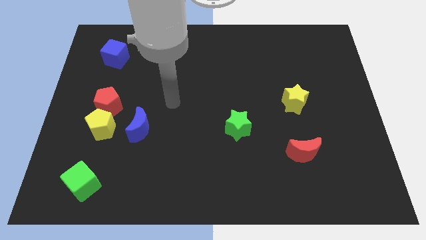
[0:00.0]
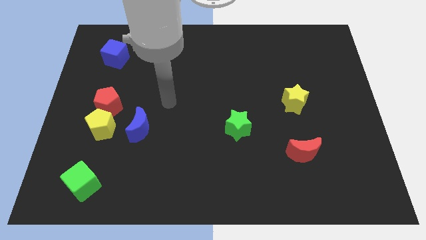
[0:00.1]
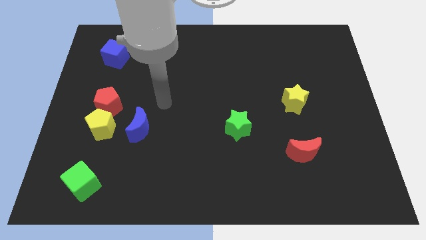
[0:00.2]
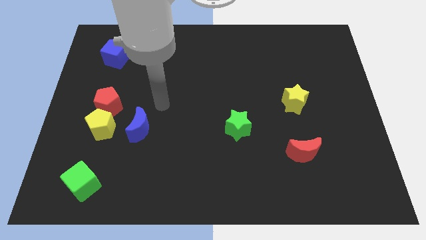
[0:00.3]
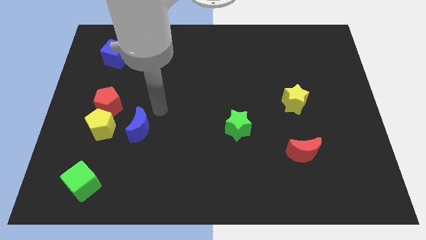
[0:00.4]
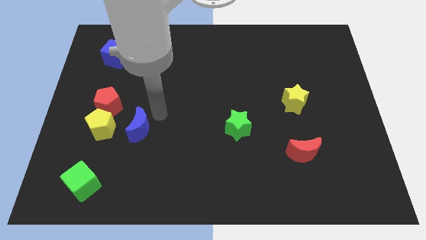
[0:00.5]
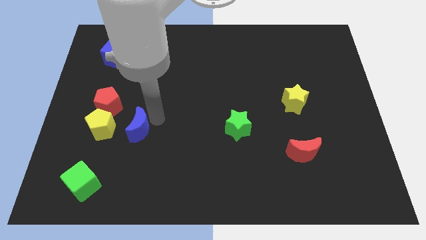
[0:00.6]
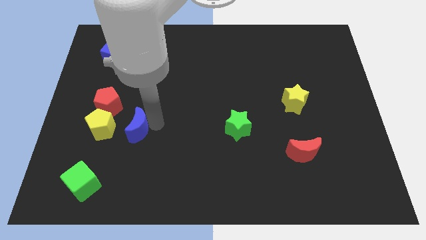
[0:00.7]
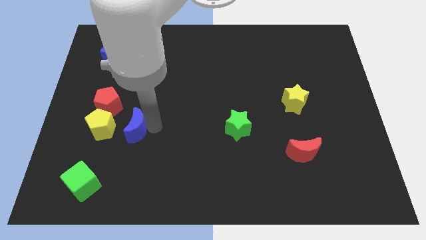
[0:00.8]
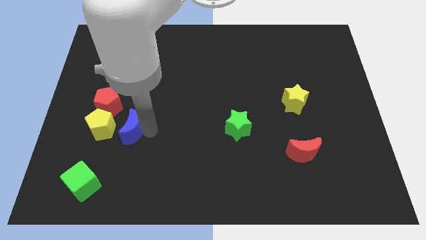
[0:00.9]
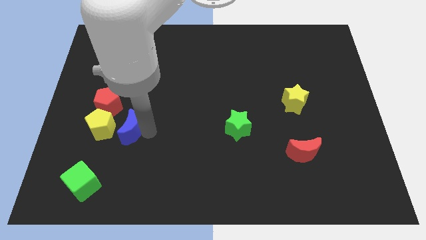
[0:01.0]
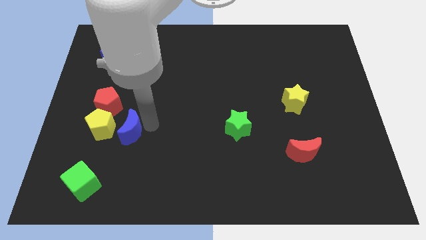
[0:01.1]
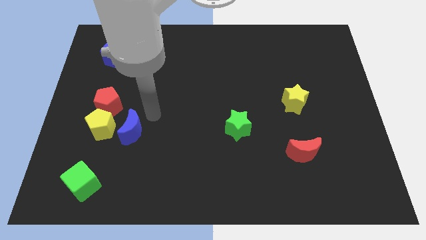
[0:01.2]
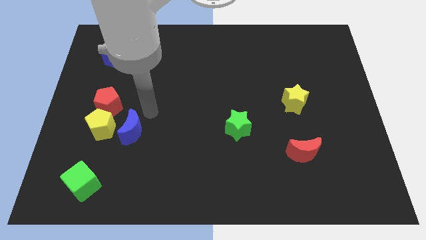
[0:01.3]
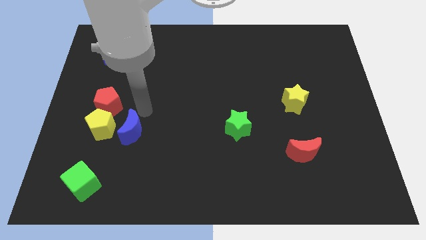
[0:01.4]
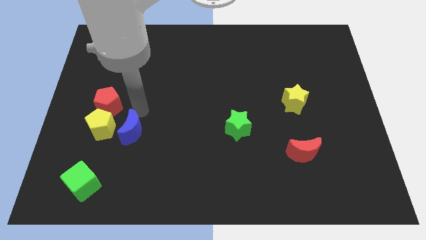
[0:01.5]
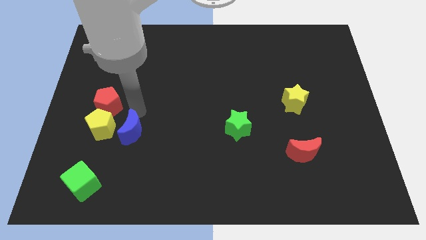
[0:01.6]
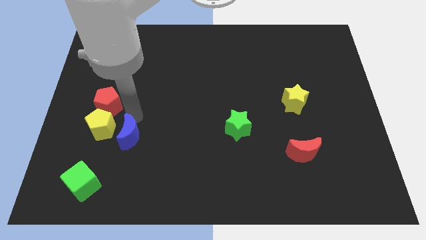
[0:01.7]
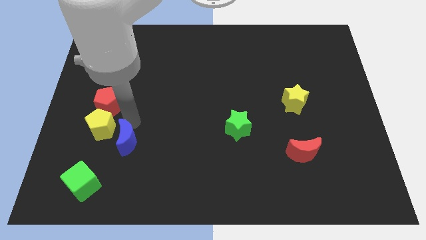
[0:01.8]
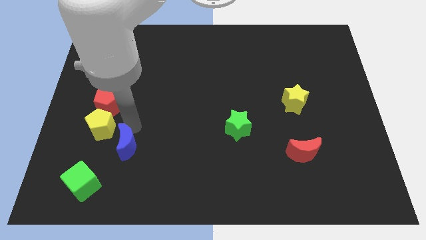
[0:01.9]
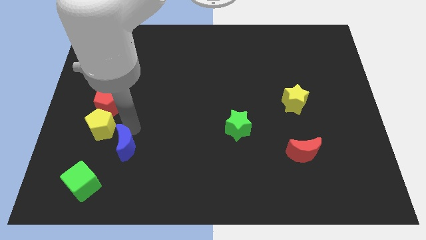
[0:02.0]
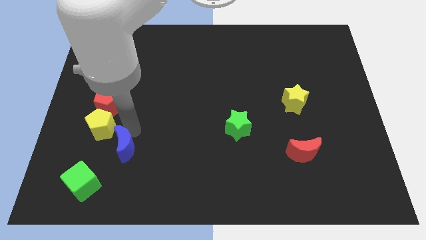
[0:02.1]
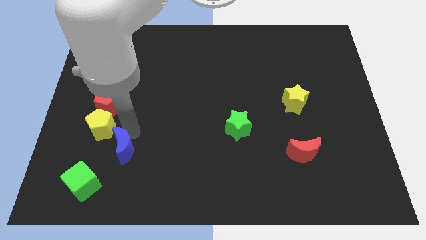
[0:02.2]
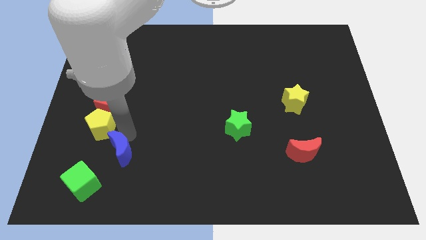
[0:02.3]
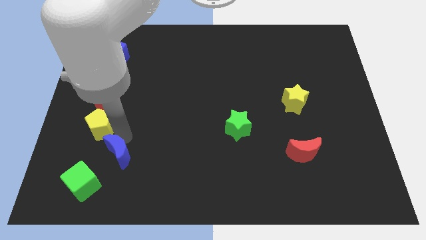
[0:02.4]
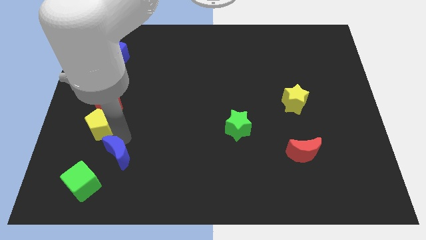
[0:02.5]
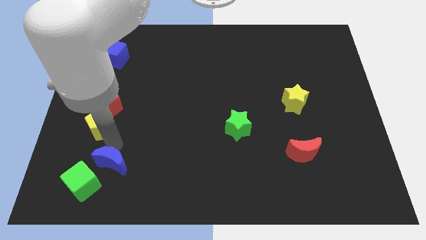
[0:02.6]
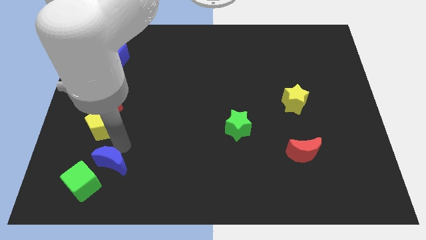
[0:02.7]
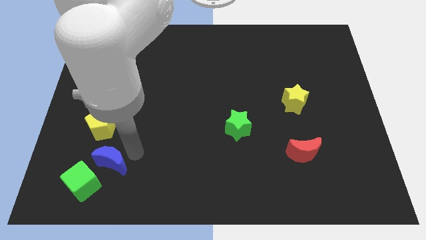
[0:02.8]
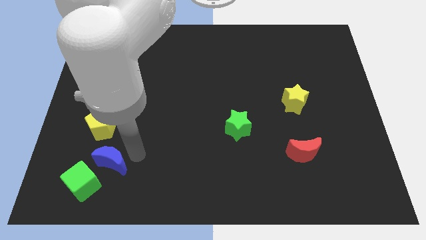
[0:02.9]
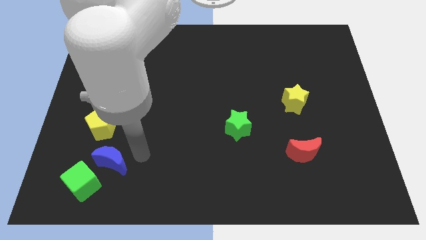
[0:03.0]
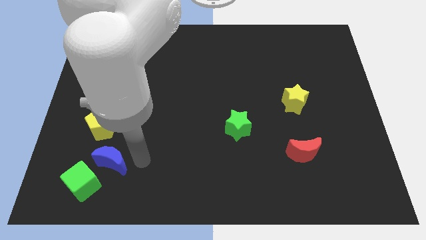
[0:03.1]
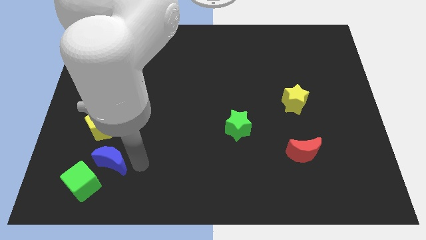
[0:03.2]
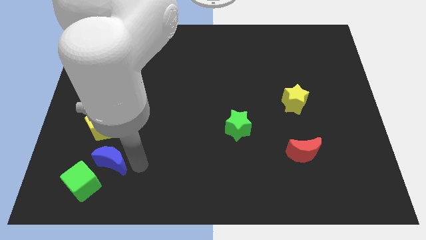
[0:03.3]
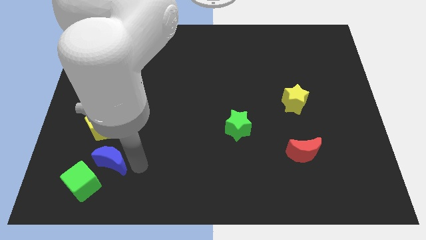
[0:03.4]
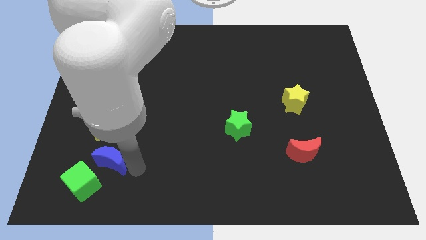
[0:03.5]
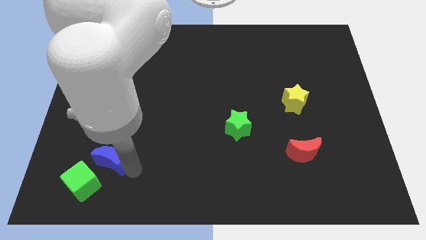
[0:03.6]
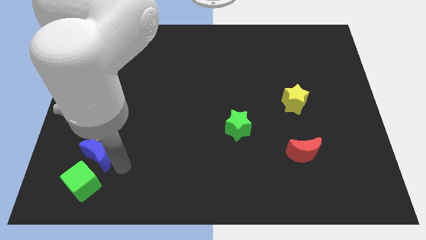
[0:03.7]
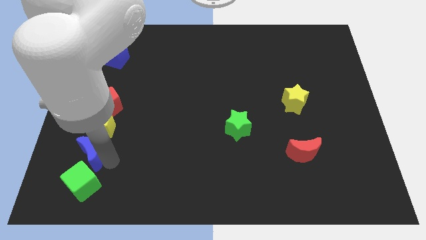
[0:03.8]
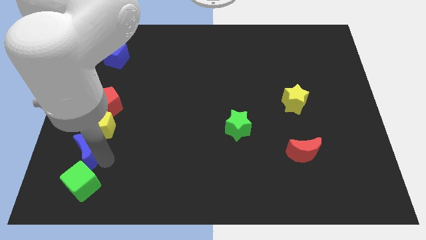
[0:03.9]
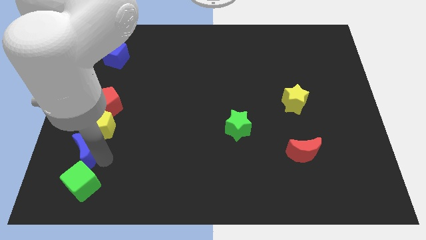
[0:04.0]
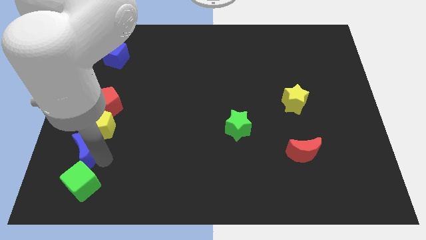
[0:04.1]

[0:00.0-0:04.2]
place the blue moon above the green cube

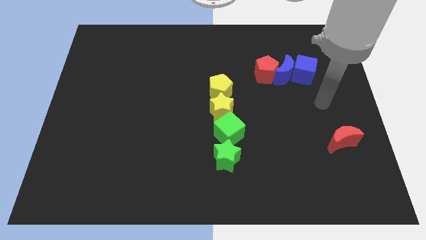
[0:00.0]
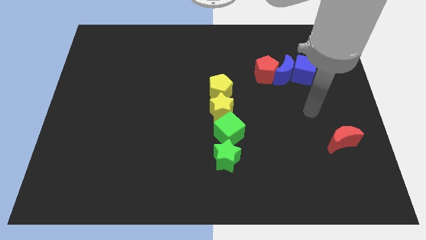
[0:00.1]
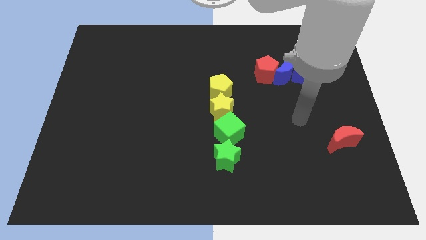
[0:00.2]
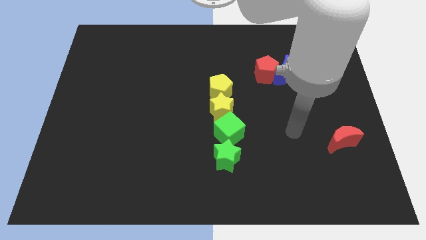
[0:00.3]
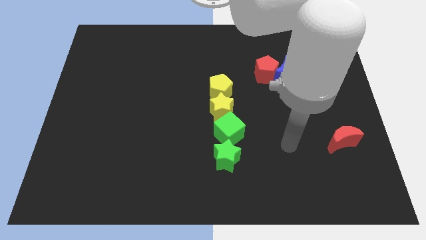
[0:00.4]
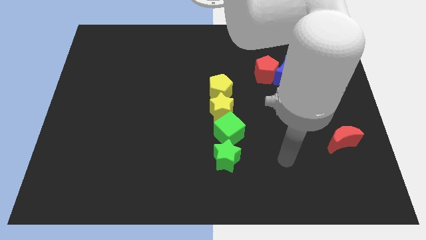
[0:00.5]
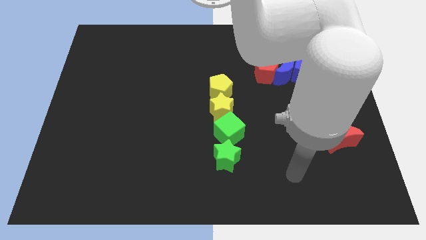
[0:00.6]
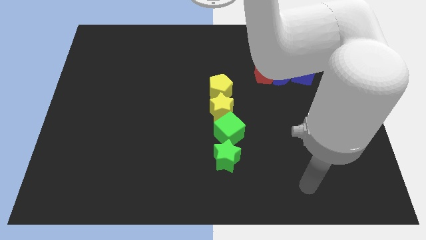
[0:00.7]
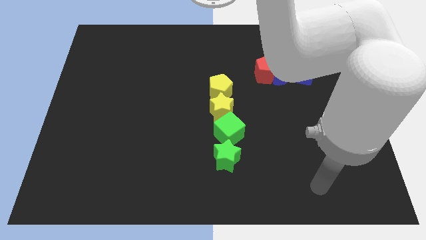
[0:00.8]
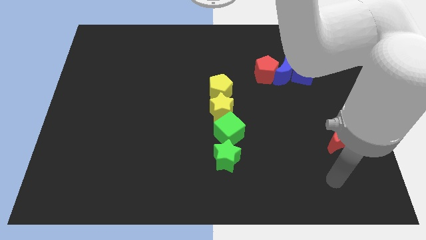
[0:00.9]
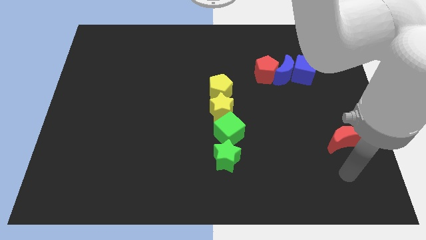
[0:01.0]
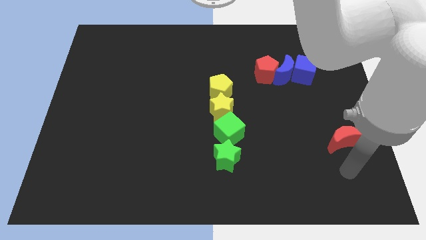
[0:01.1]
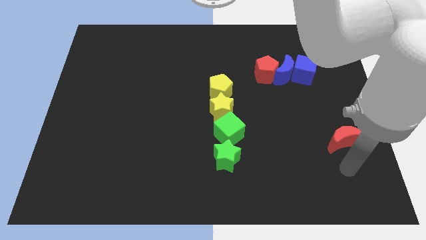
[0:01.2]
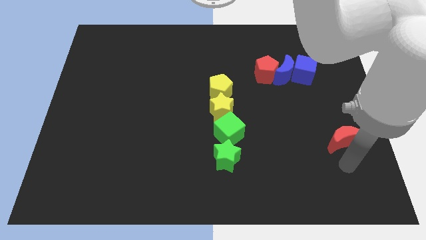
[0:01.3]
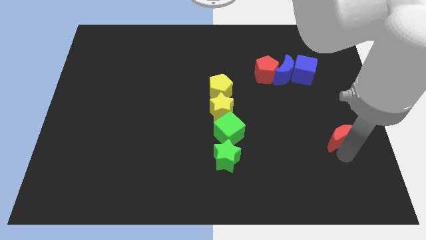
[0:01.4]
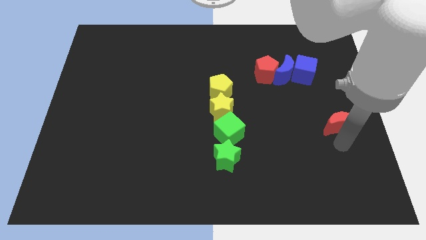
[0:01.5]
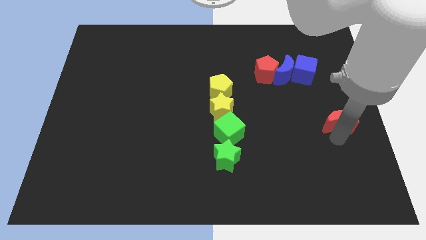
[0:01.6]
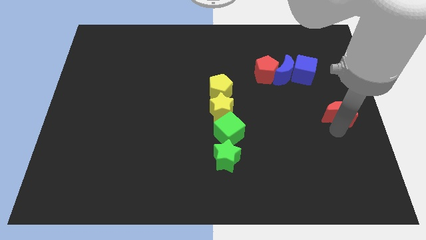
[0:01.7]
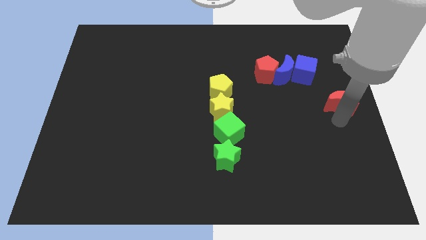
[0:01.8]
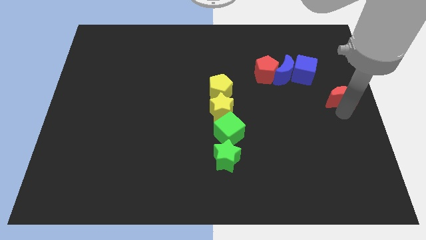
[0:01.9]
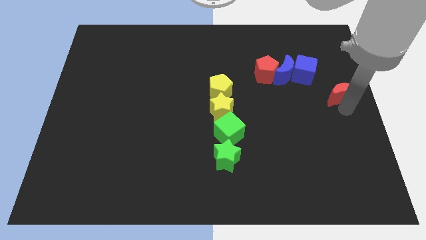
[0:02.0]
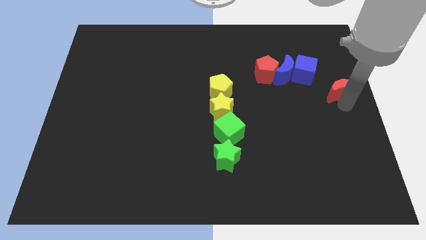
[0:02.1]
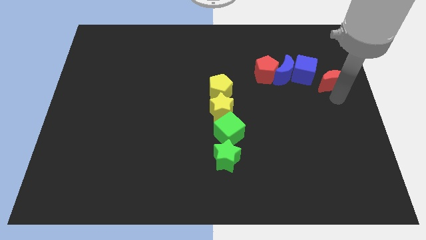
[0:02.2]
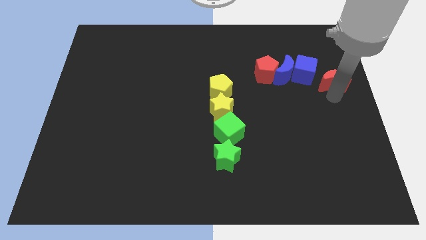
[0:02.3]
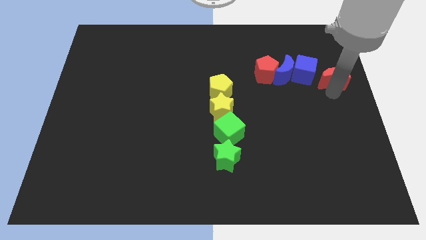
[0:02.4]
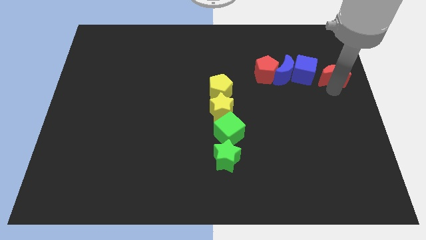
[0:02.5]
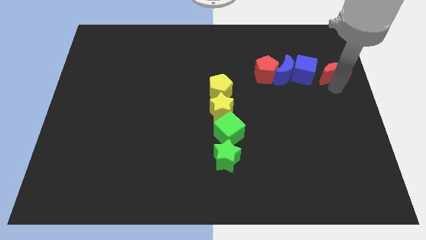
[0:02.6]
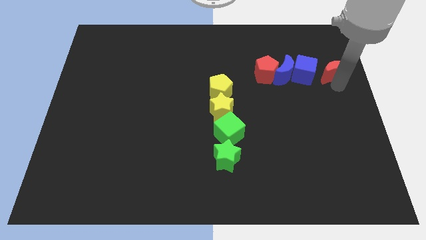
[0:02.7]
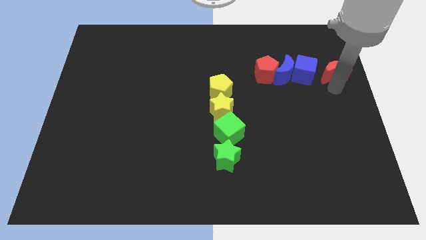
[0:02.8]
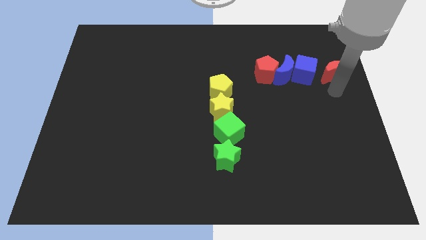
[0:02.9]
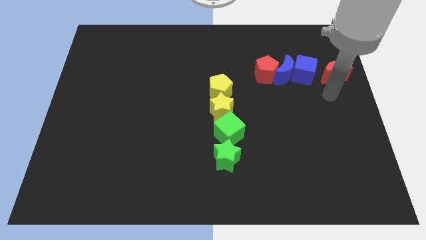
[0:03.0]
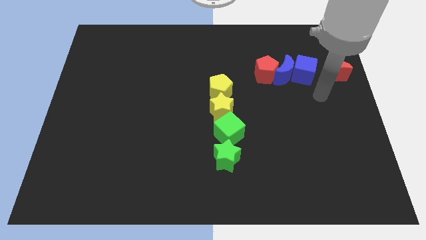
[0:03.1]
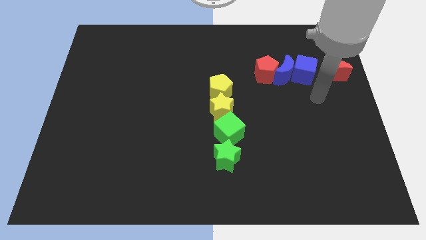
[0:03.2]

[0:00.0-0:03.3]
place the red crescent right to the blue cube

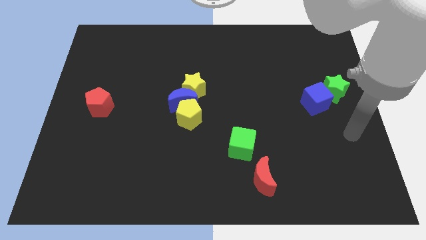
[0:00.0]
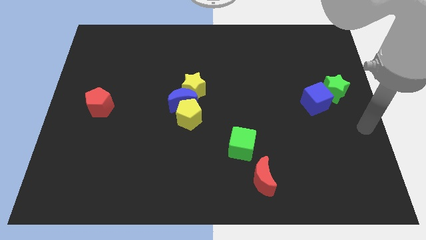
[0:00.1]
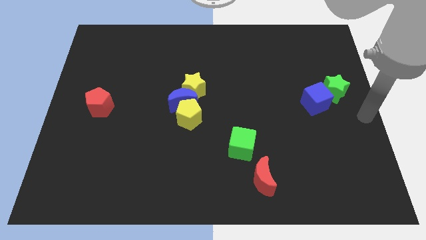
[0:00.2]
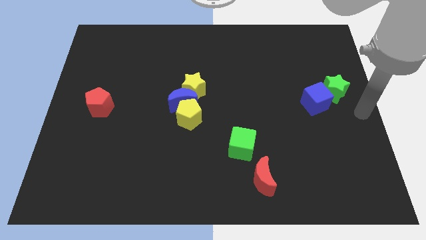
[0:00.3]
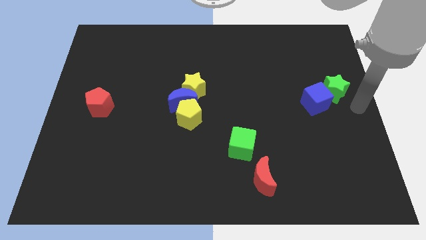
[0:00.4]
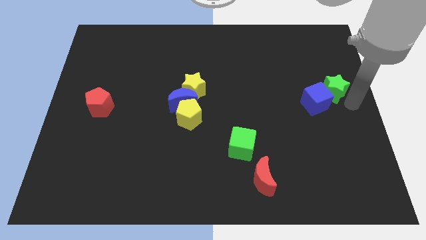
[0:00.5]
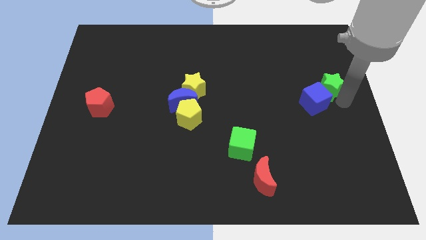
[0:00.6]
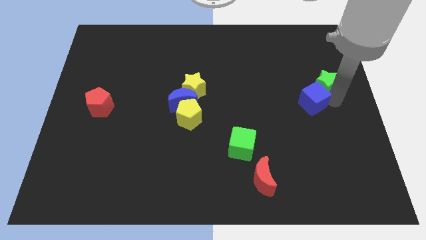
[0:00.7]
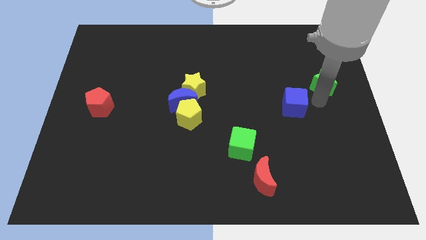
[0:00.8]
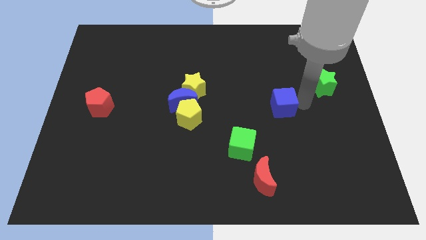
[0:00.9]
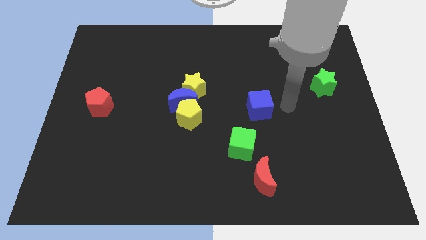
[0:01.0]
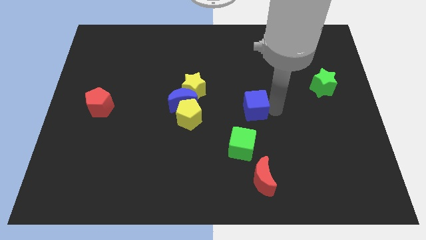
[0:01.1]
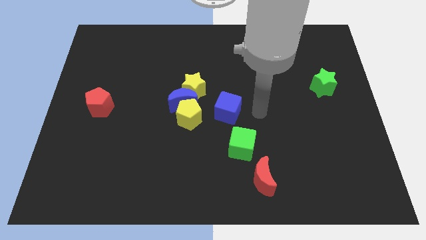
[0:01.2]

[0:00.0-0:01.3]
separate blue cube from the green star
